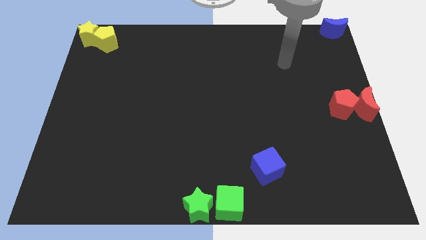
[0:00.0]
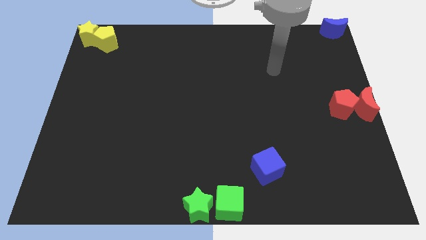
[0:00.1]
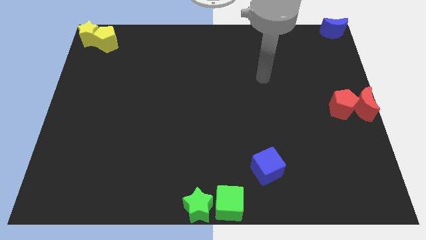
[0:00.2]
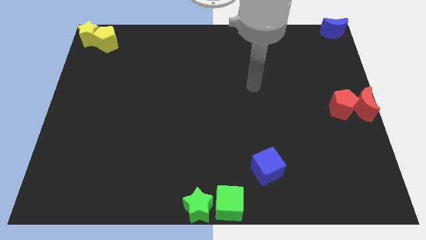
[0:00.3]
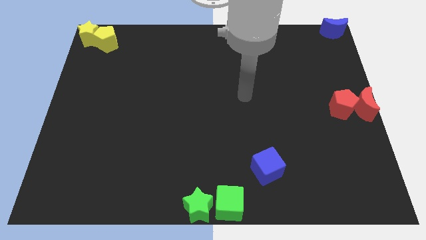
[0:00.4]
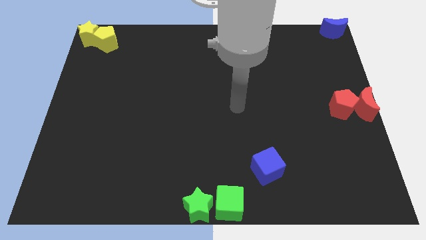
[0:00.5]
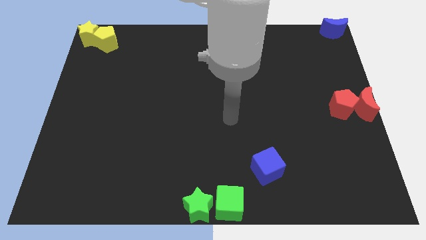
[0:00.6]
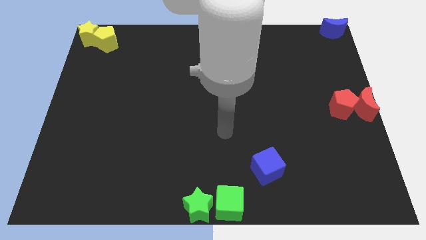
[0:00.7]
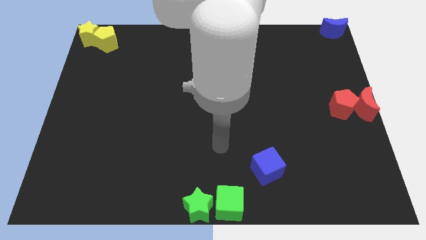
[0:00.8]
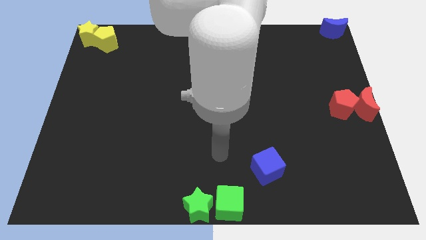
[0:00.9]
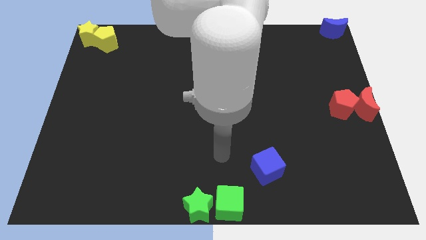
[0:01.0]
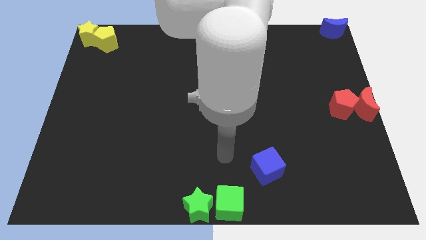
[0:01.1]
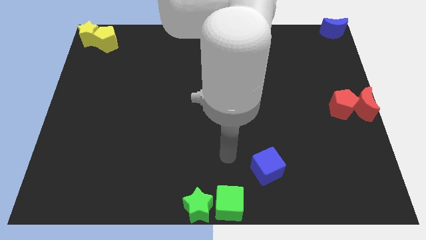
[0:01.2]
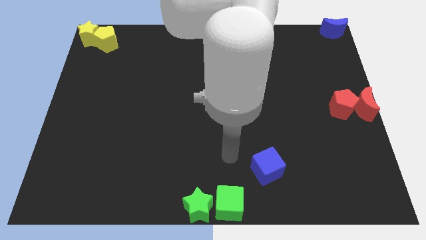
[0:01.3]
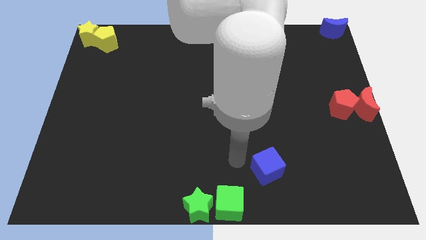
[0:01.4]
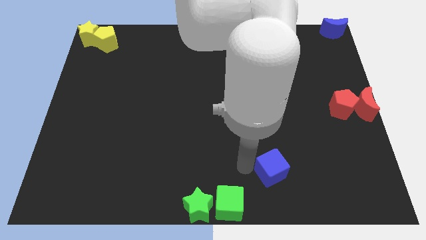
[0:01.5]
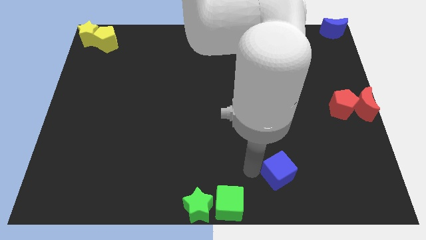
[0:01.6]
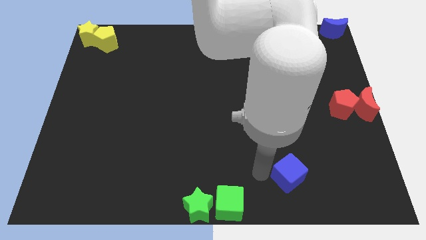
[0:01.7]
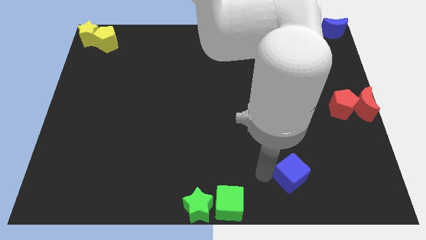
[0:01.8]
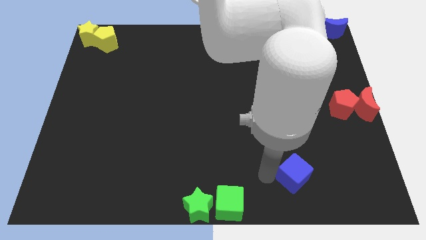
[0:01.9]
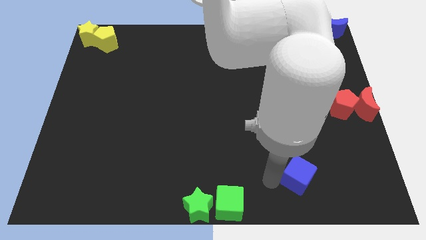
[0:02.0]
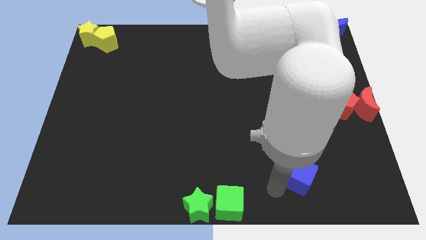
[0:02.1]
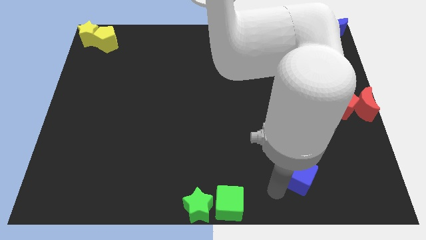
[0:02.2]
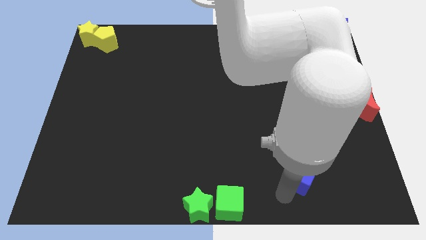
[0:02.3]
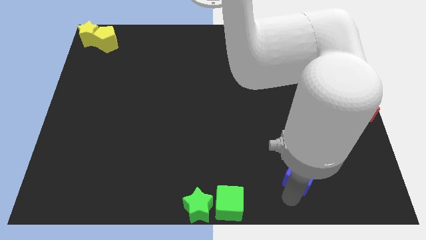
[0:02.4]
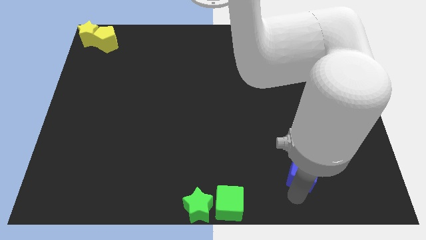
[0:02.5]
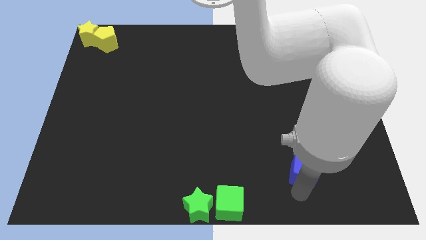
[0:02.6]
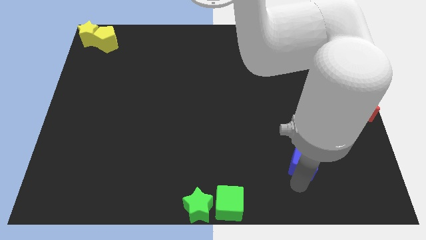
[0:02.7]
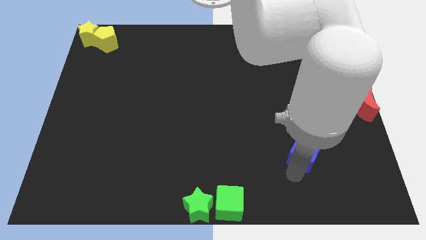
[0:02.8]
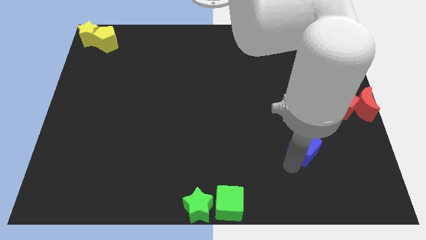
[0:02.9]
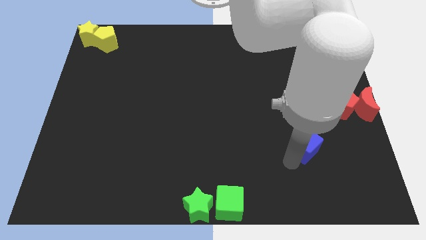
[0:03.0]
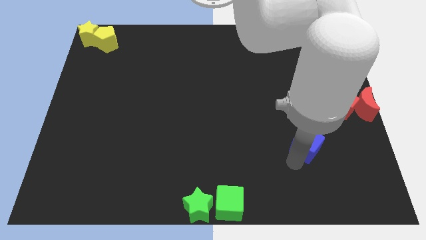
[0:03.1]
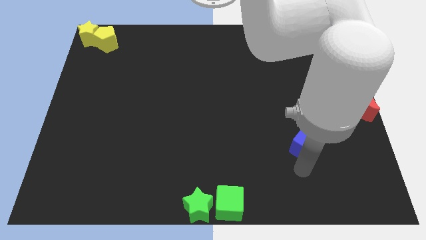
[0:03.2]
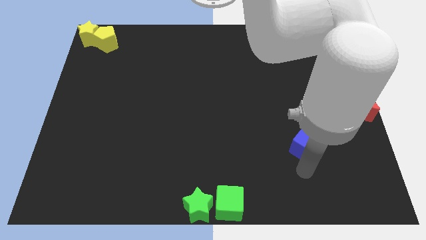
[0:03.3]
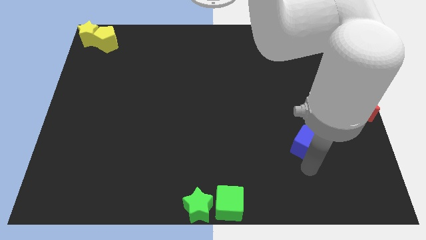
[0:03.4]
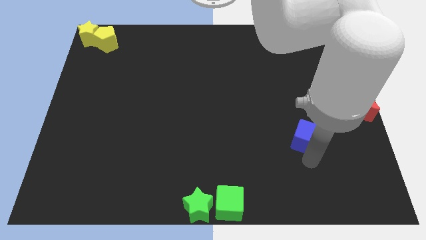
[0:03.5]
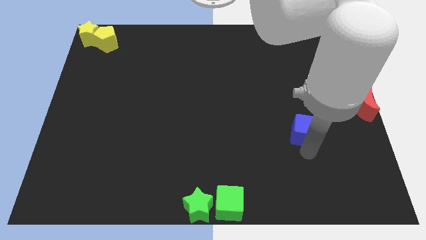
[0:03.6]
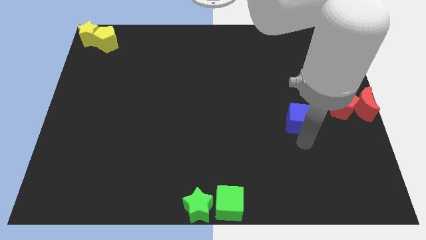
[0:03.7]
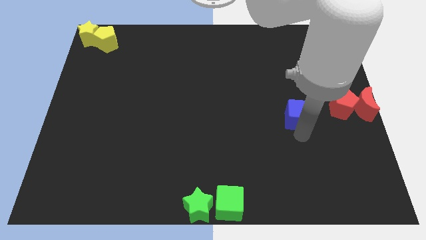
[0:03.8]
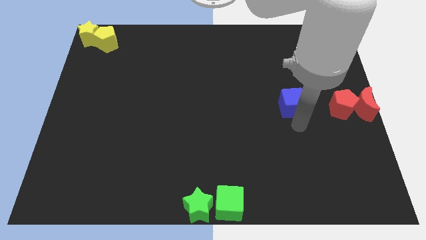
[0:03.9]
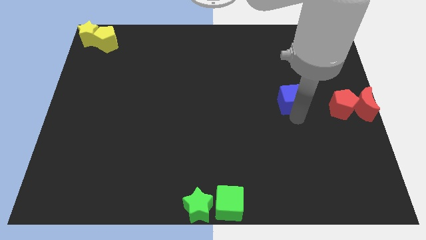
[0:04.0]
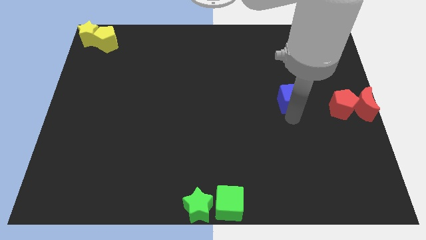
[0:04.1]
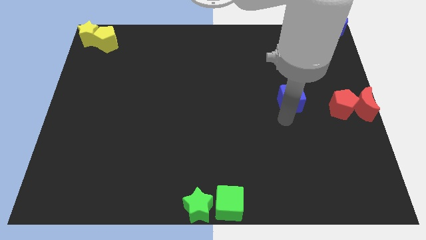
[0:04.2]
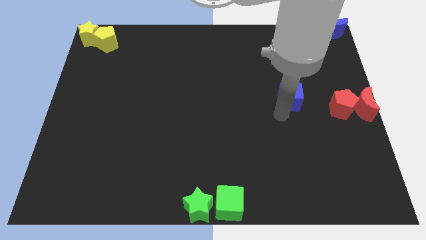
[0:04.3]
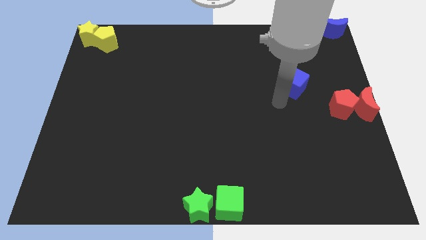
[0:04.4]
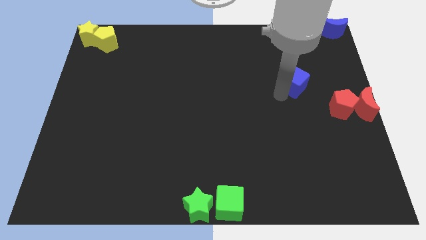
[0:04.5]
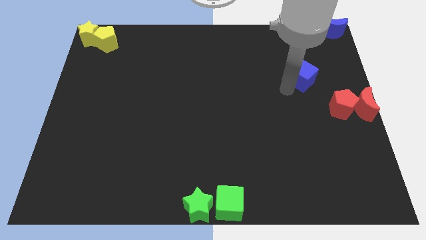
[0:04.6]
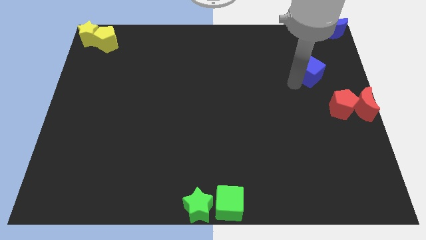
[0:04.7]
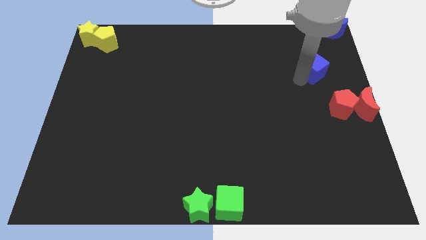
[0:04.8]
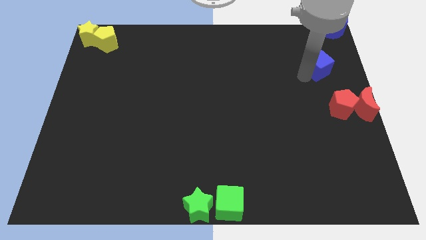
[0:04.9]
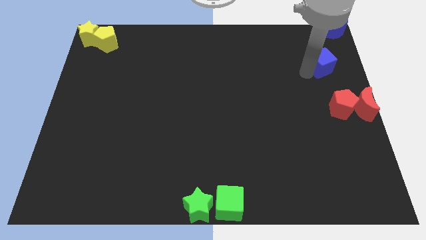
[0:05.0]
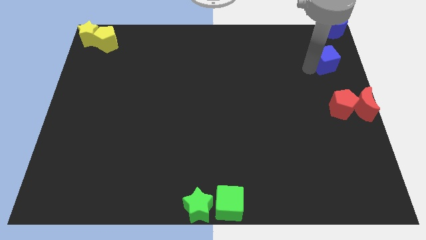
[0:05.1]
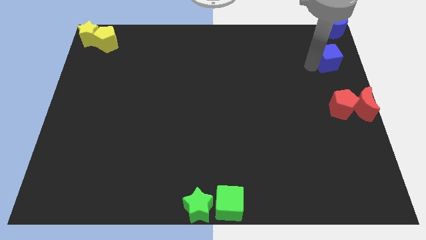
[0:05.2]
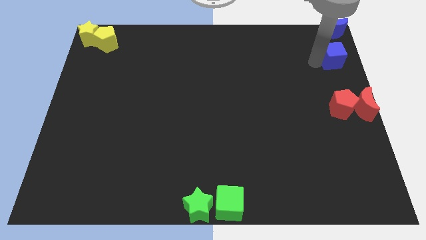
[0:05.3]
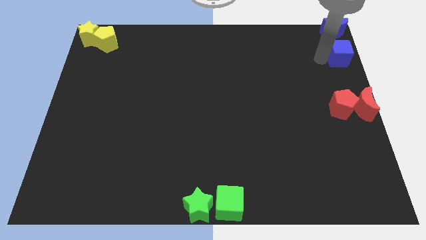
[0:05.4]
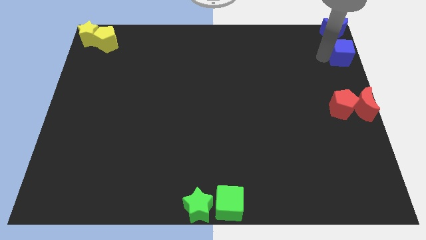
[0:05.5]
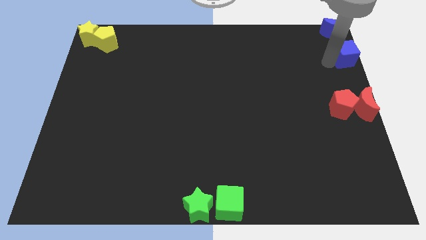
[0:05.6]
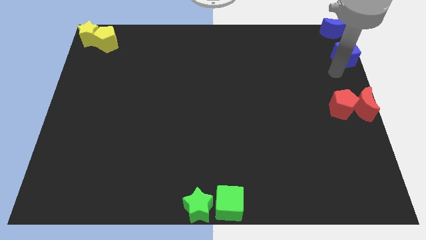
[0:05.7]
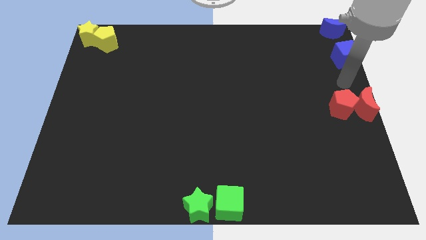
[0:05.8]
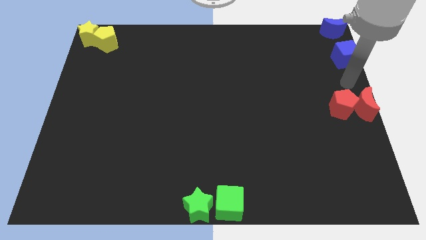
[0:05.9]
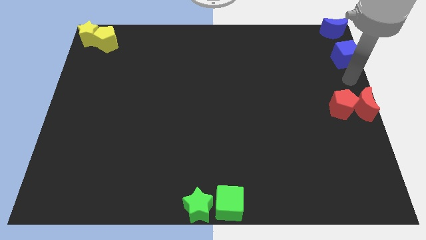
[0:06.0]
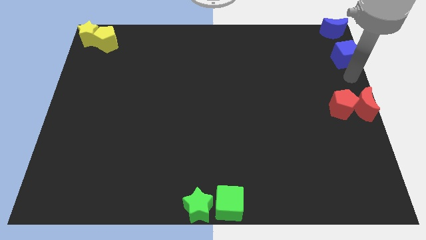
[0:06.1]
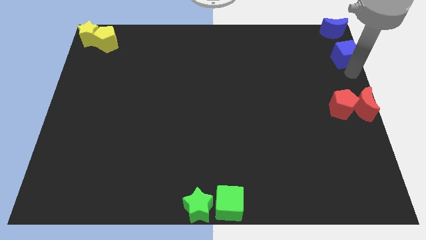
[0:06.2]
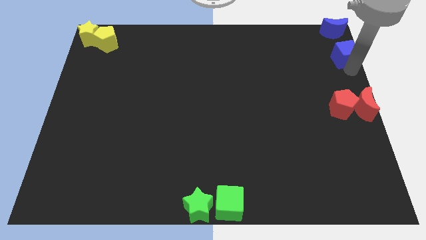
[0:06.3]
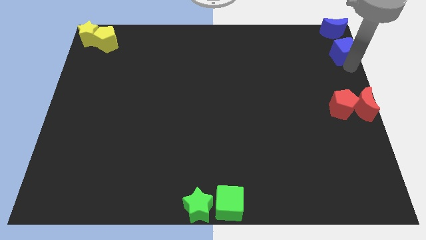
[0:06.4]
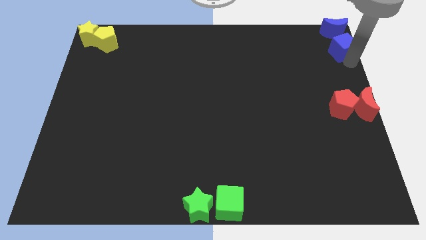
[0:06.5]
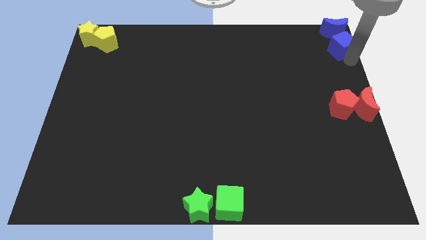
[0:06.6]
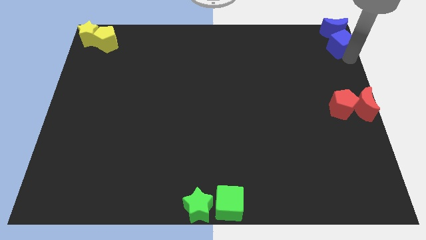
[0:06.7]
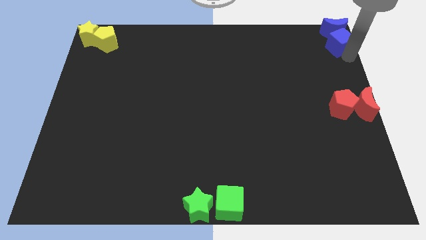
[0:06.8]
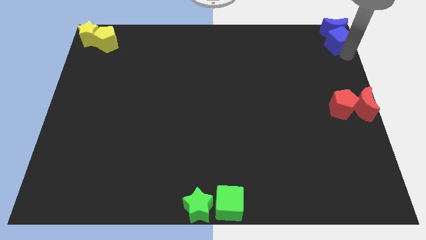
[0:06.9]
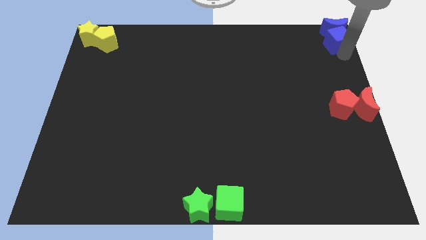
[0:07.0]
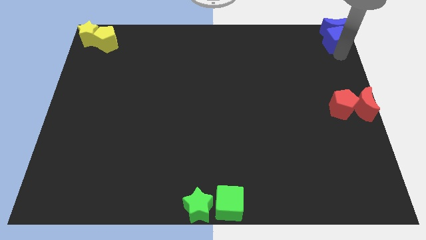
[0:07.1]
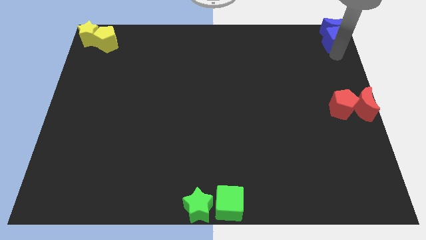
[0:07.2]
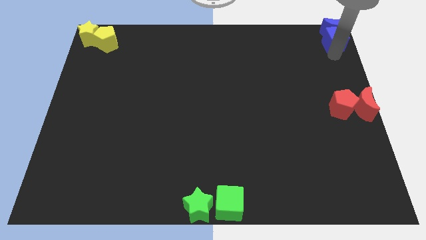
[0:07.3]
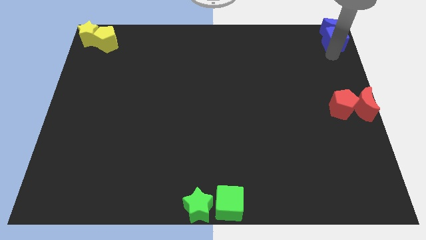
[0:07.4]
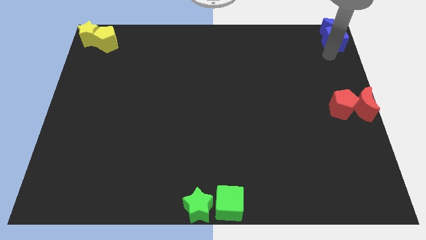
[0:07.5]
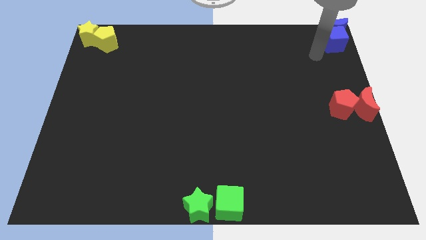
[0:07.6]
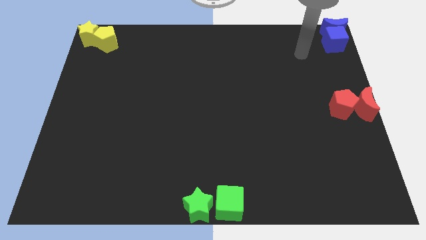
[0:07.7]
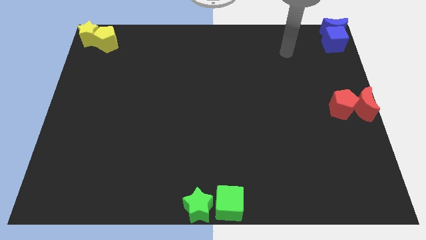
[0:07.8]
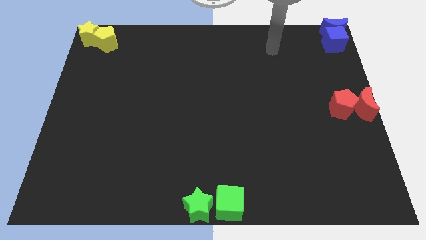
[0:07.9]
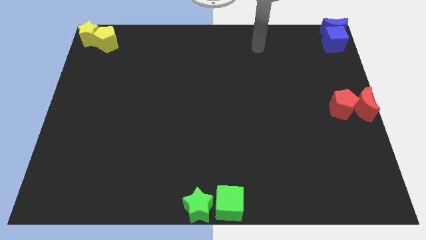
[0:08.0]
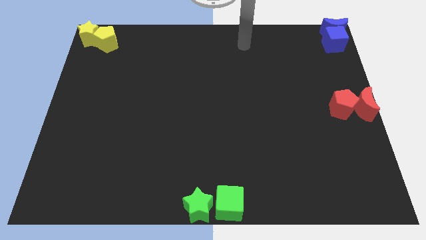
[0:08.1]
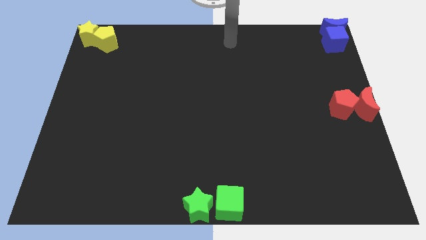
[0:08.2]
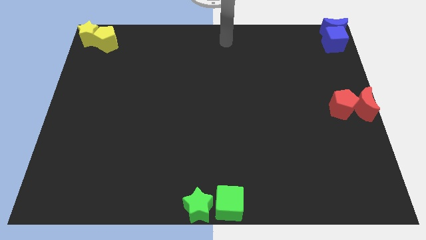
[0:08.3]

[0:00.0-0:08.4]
move blue moon to the top right corner of the board

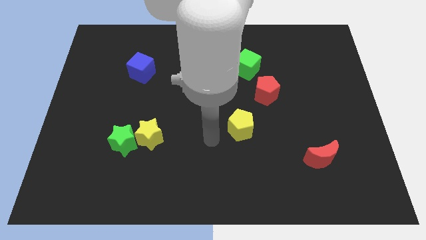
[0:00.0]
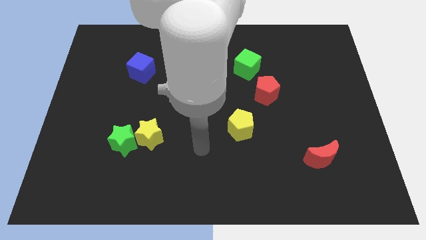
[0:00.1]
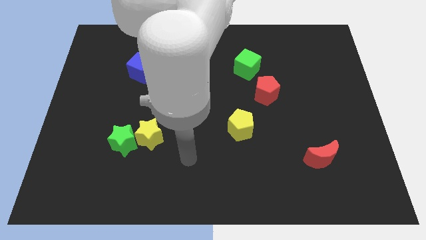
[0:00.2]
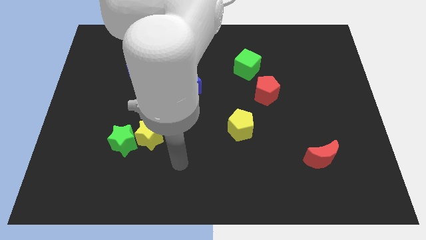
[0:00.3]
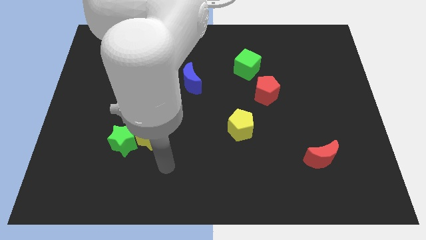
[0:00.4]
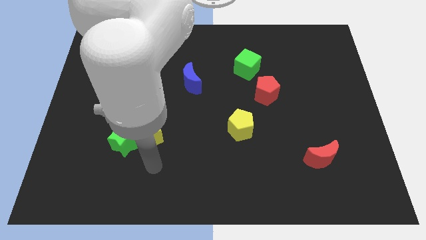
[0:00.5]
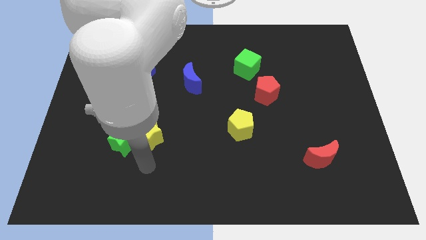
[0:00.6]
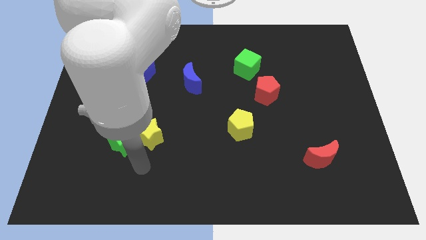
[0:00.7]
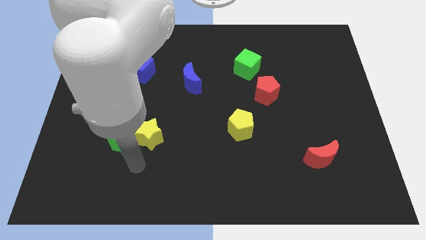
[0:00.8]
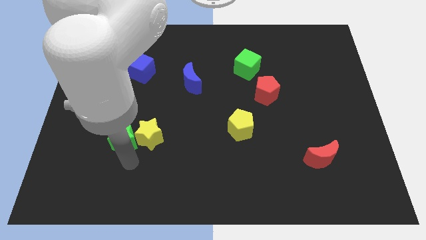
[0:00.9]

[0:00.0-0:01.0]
move arm below the yellow star
